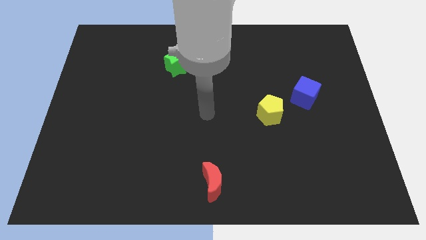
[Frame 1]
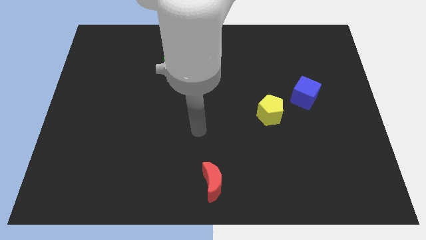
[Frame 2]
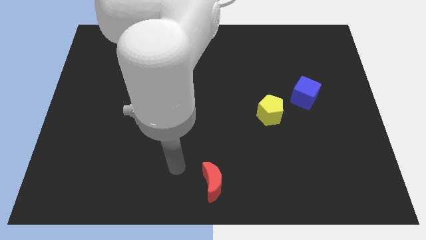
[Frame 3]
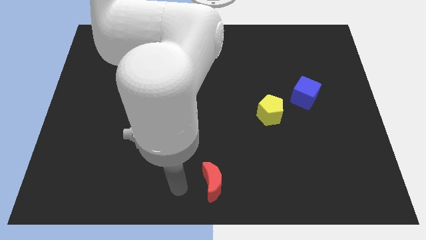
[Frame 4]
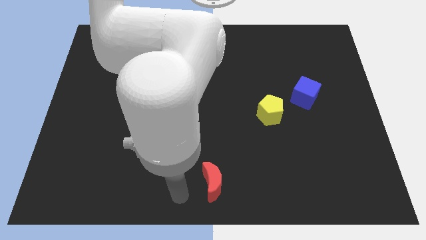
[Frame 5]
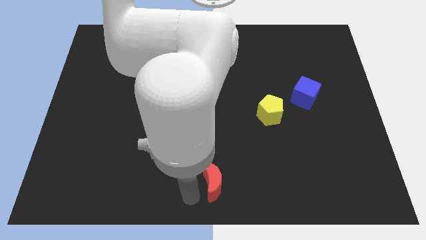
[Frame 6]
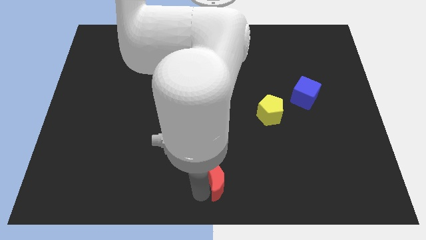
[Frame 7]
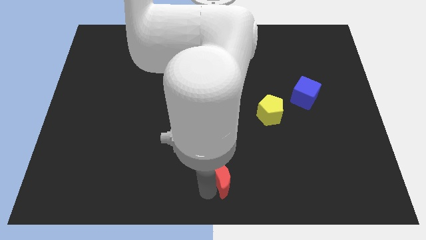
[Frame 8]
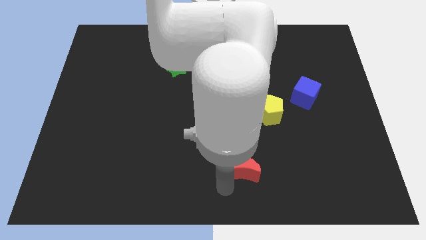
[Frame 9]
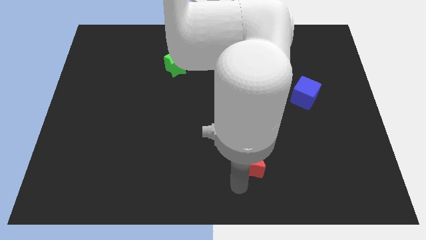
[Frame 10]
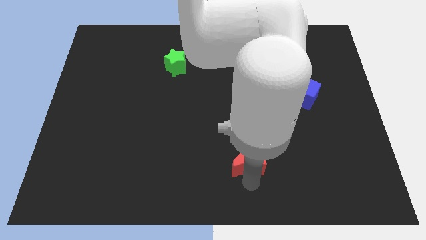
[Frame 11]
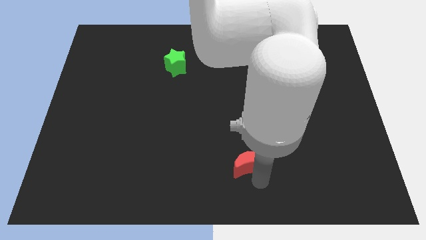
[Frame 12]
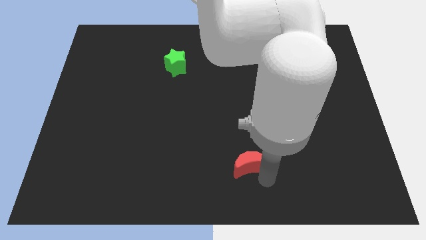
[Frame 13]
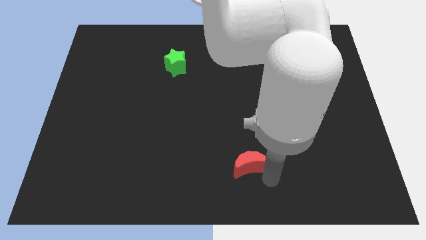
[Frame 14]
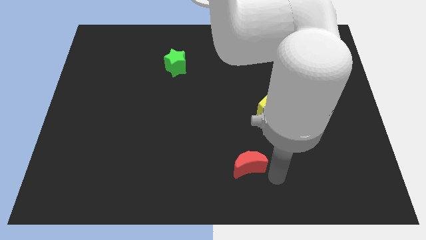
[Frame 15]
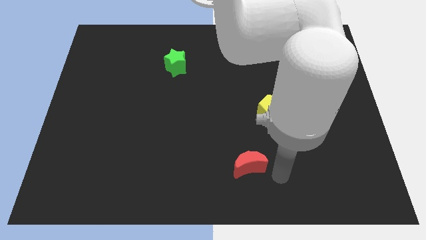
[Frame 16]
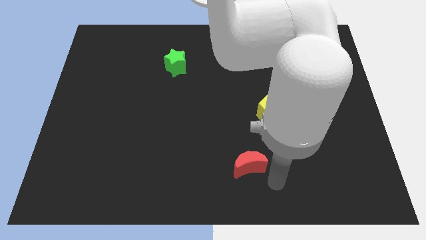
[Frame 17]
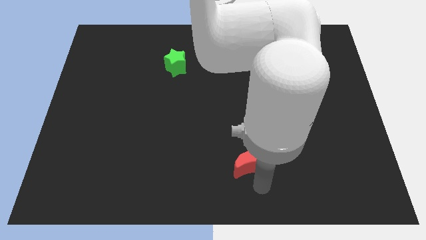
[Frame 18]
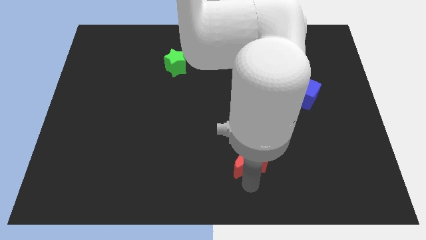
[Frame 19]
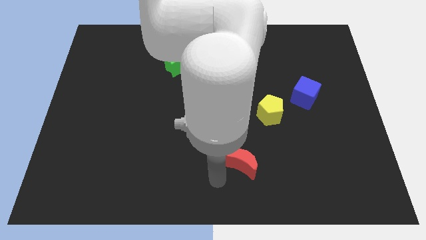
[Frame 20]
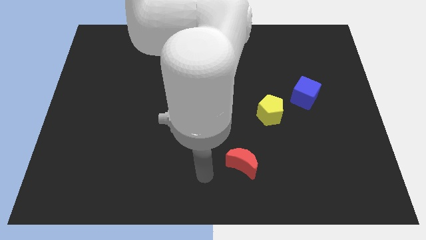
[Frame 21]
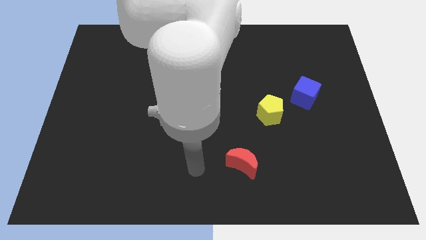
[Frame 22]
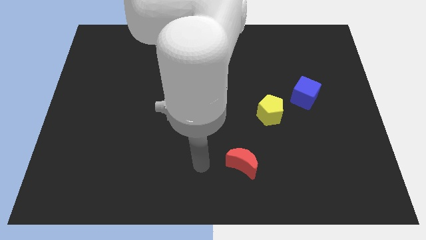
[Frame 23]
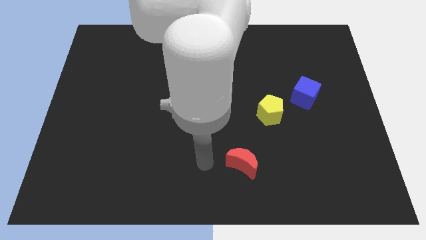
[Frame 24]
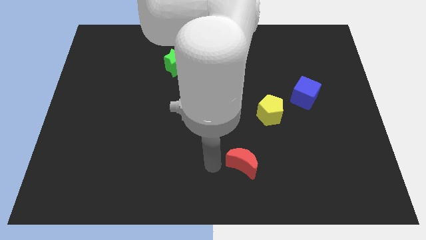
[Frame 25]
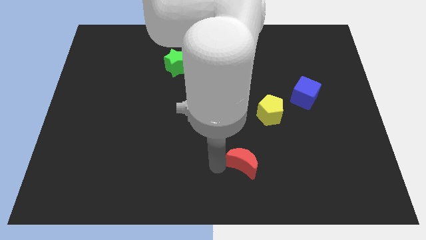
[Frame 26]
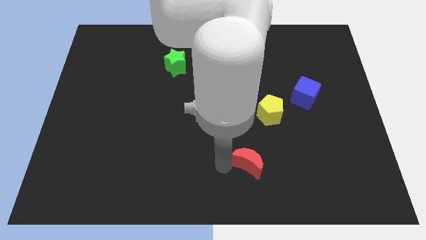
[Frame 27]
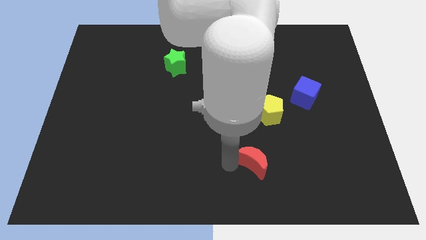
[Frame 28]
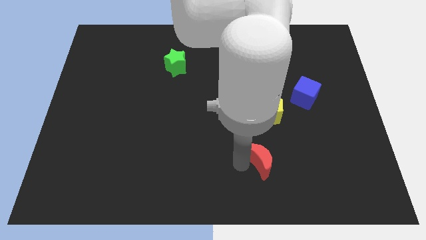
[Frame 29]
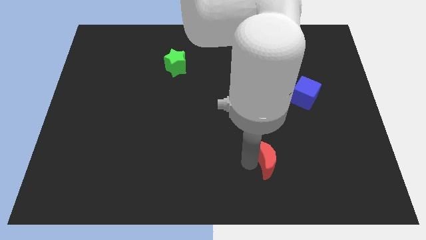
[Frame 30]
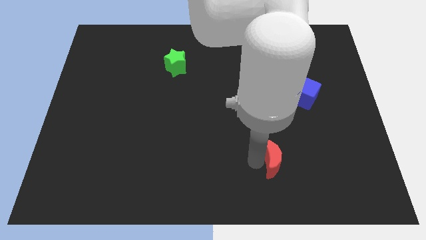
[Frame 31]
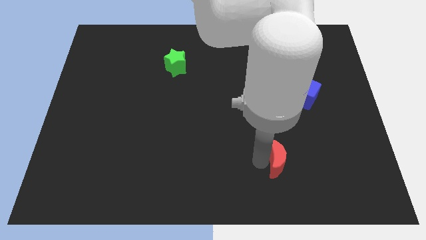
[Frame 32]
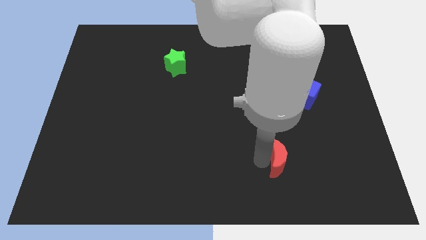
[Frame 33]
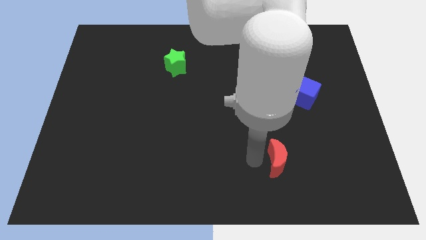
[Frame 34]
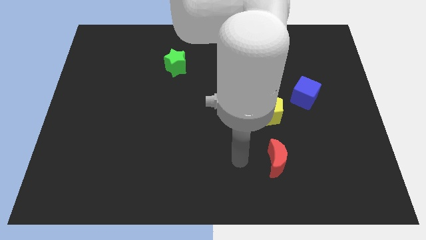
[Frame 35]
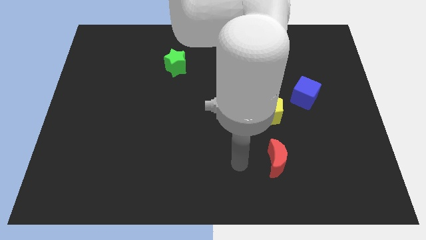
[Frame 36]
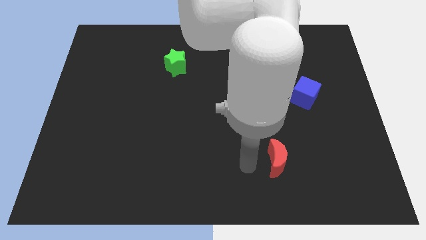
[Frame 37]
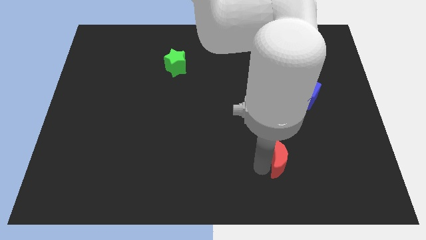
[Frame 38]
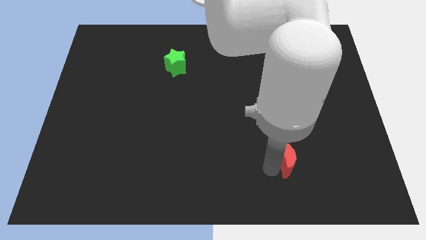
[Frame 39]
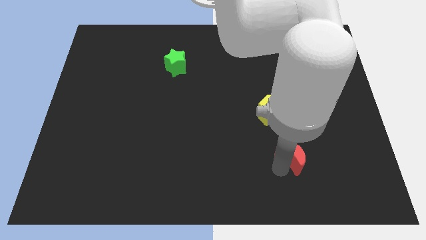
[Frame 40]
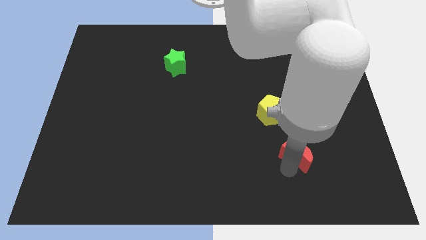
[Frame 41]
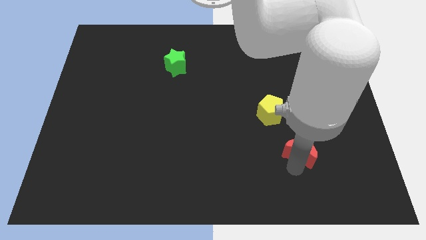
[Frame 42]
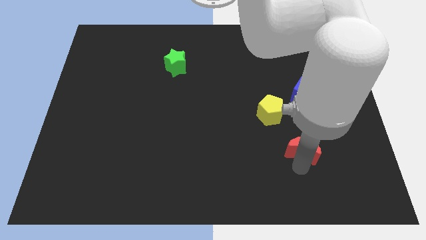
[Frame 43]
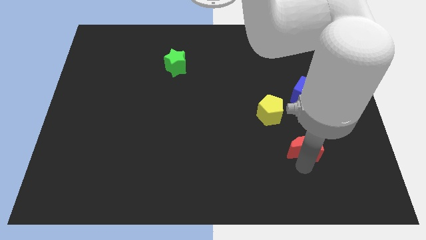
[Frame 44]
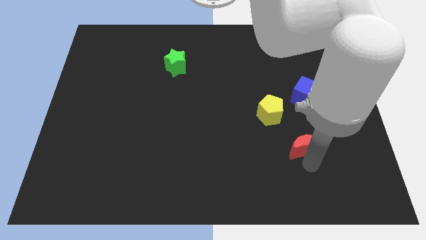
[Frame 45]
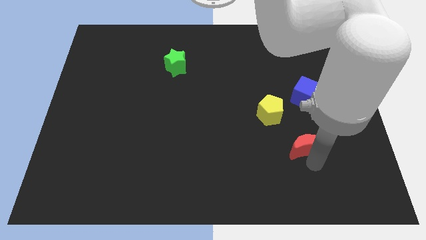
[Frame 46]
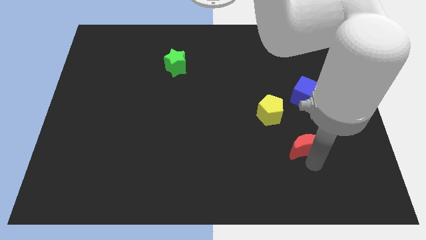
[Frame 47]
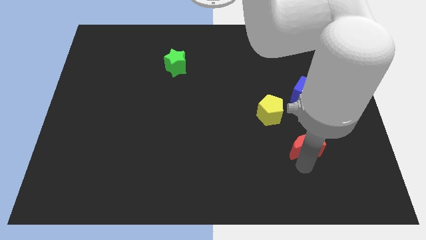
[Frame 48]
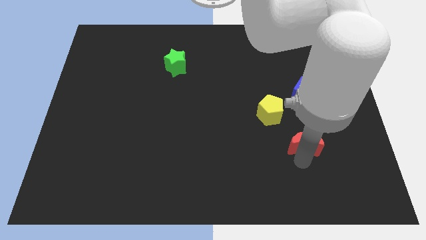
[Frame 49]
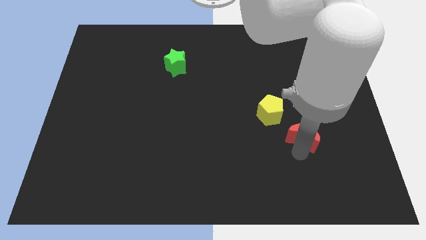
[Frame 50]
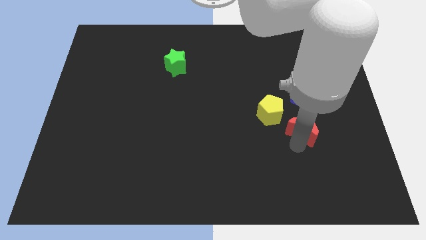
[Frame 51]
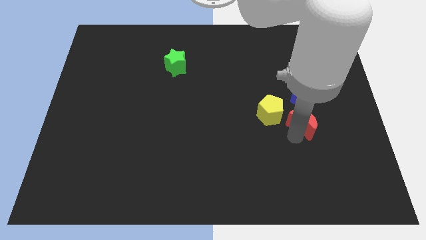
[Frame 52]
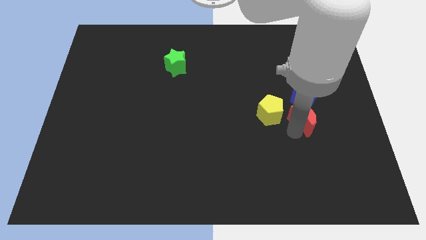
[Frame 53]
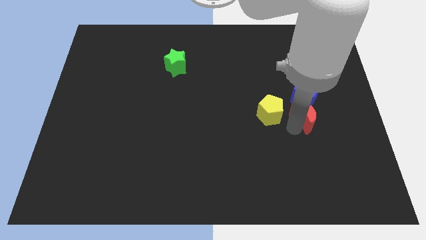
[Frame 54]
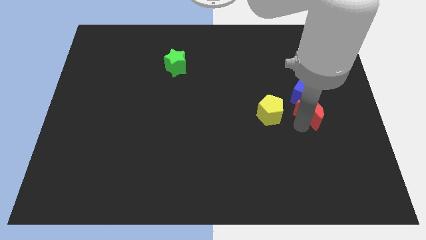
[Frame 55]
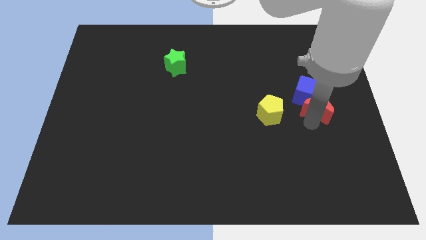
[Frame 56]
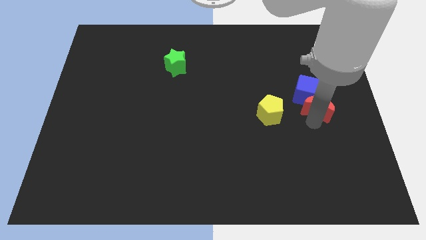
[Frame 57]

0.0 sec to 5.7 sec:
slide the moon to the cube

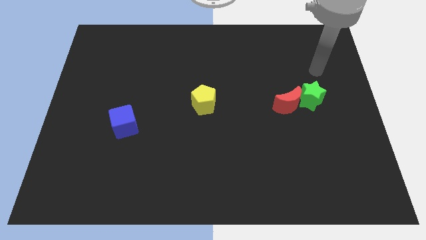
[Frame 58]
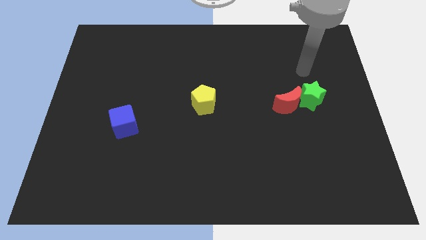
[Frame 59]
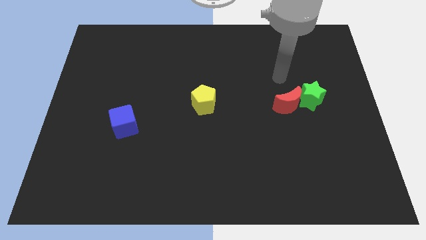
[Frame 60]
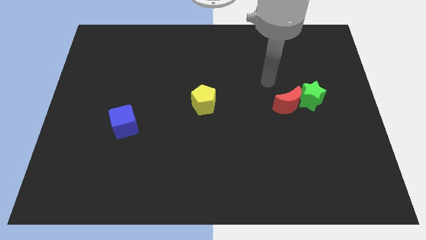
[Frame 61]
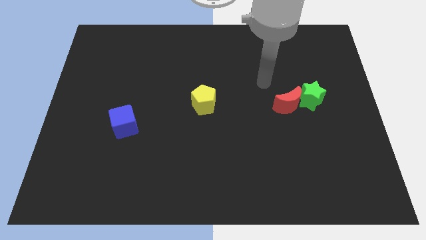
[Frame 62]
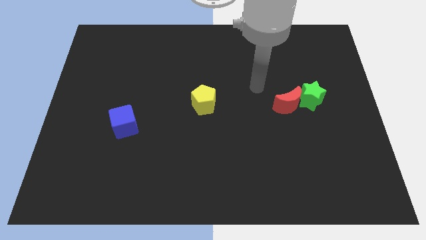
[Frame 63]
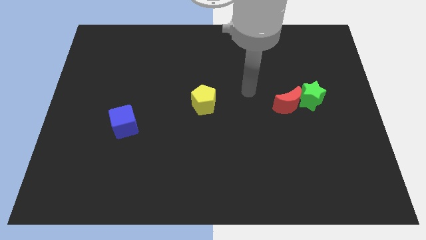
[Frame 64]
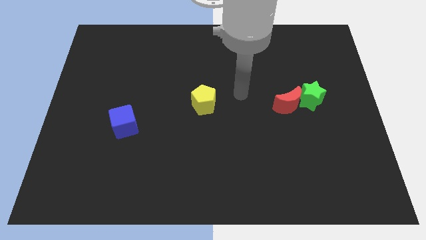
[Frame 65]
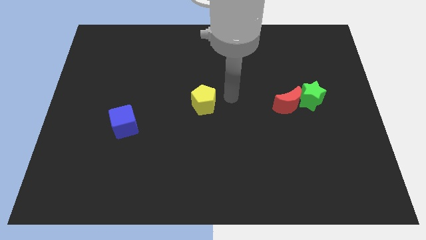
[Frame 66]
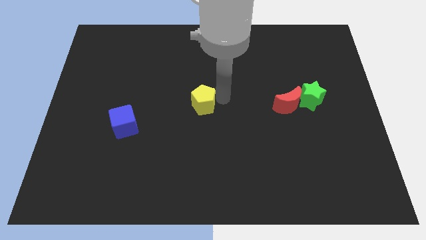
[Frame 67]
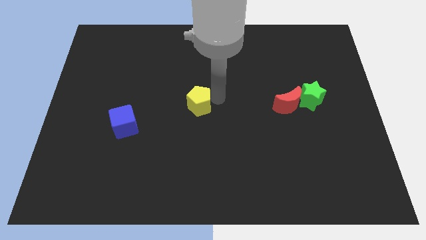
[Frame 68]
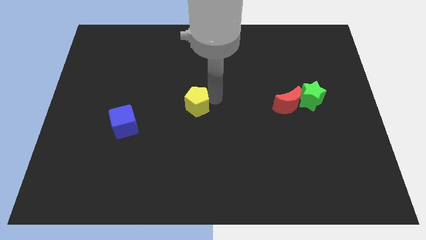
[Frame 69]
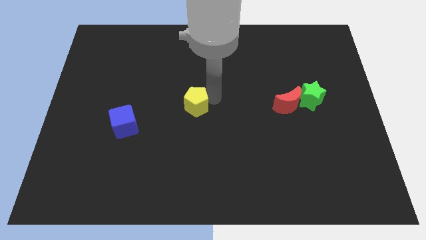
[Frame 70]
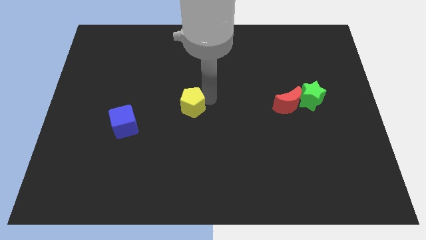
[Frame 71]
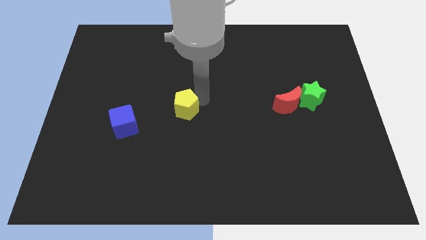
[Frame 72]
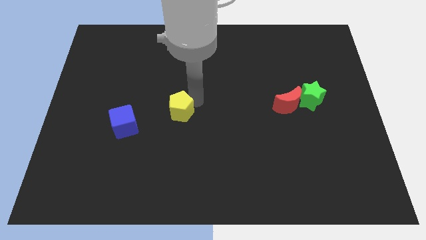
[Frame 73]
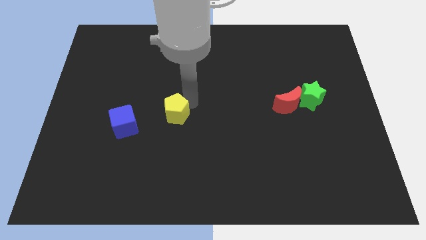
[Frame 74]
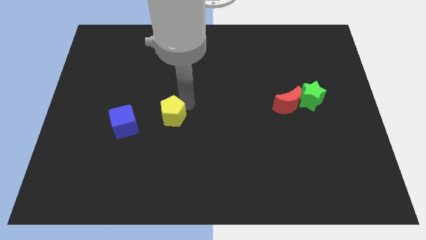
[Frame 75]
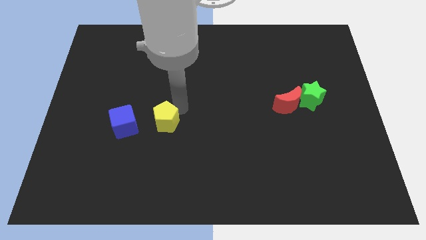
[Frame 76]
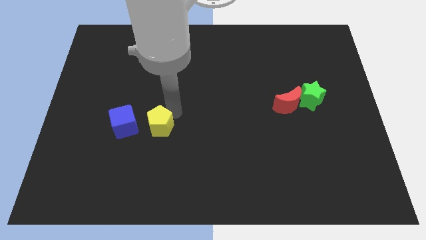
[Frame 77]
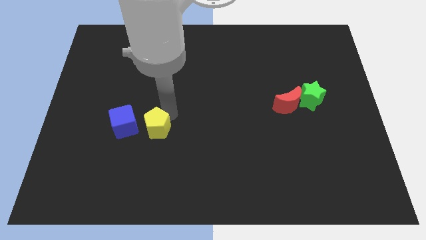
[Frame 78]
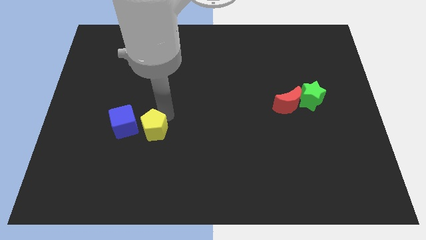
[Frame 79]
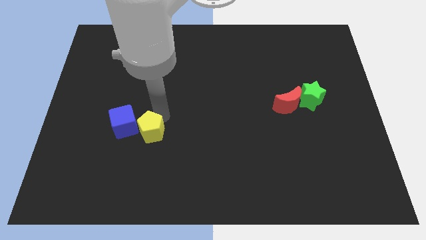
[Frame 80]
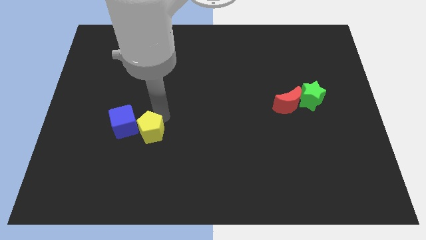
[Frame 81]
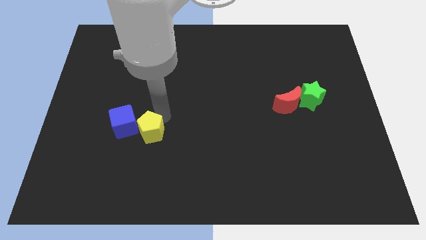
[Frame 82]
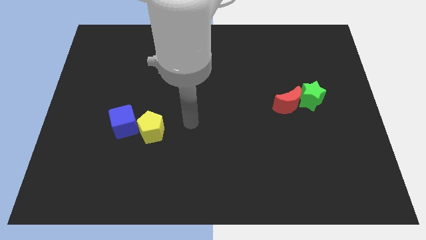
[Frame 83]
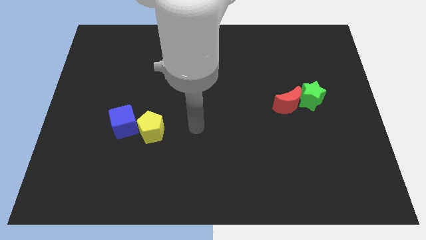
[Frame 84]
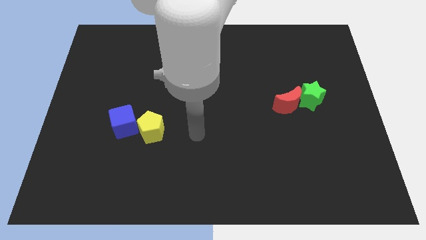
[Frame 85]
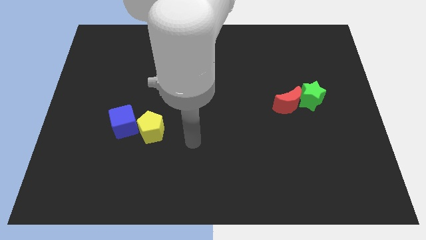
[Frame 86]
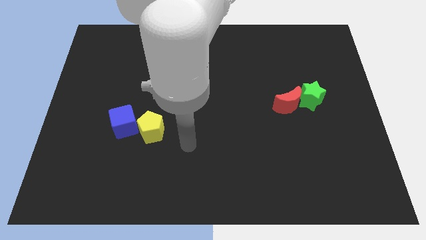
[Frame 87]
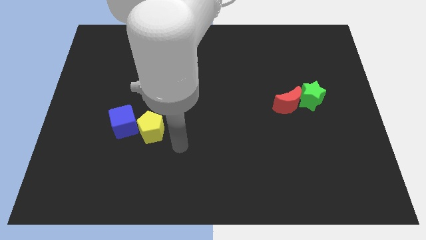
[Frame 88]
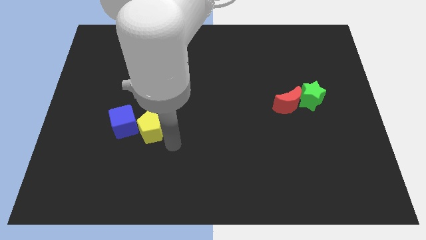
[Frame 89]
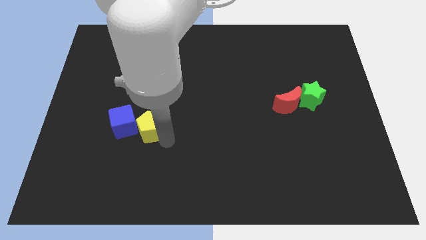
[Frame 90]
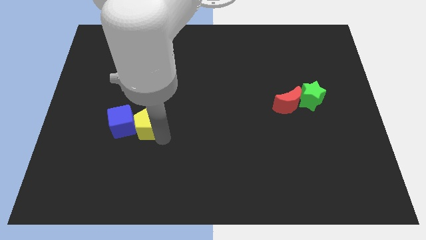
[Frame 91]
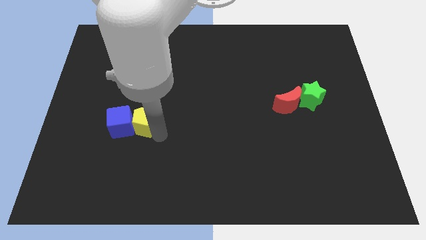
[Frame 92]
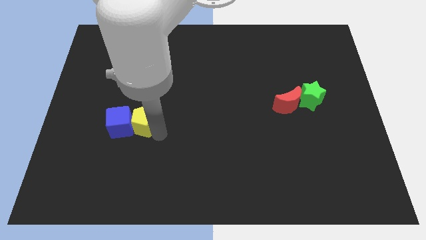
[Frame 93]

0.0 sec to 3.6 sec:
slide the yellow block towards the cube
